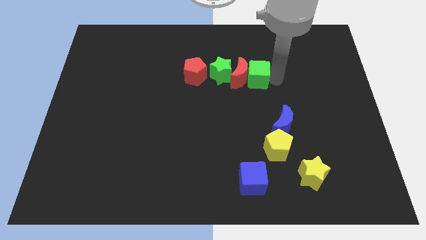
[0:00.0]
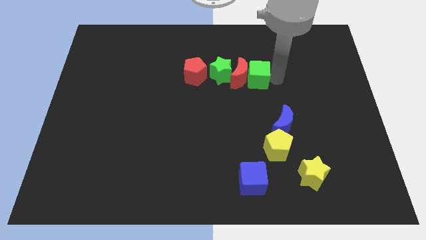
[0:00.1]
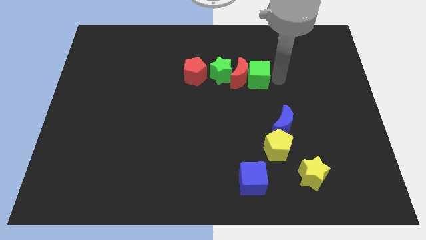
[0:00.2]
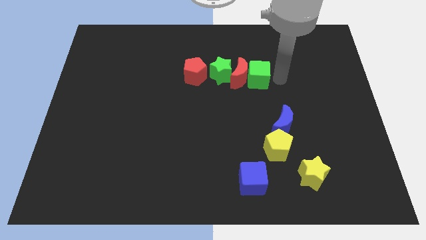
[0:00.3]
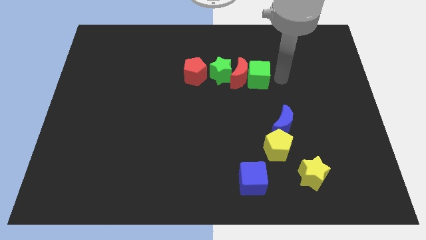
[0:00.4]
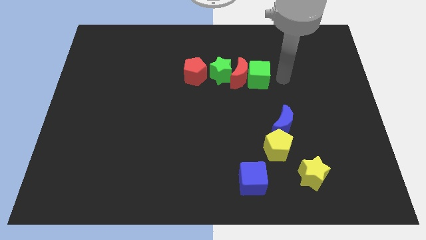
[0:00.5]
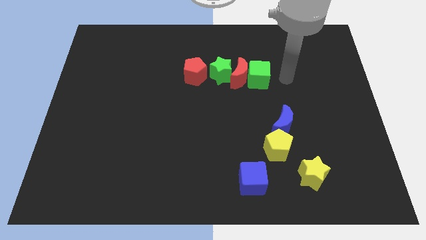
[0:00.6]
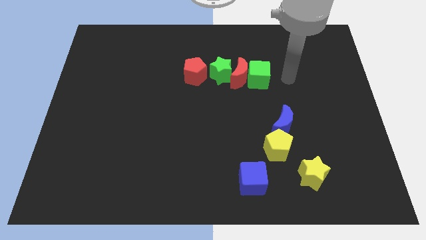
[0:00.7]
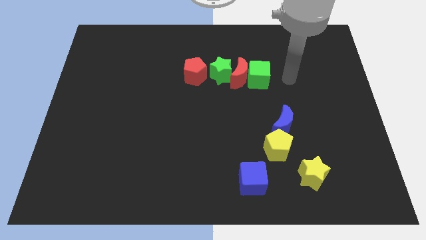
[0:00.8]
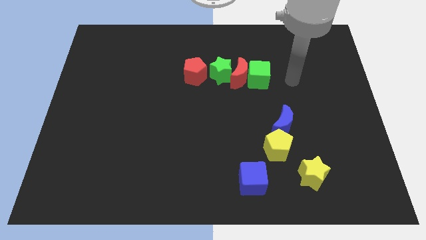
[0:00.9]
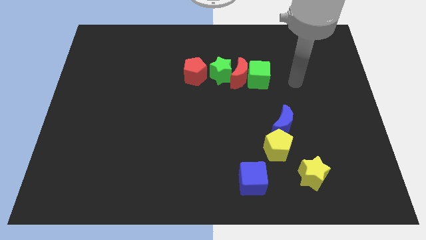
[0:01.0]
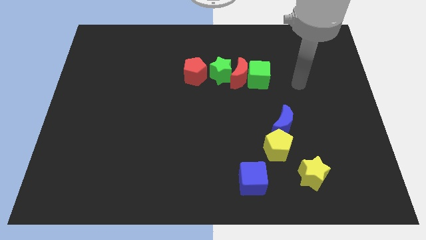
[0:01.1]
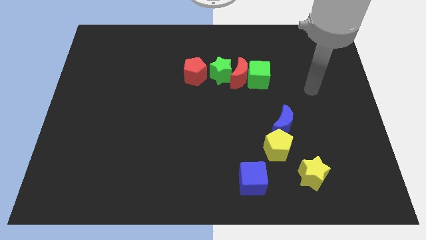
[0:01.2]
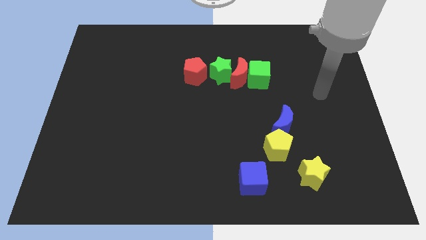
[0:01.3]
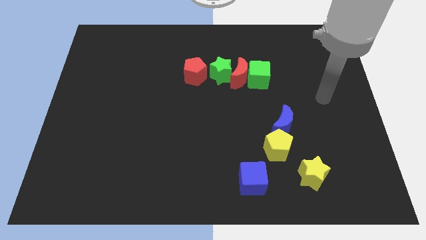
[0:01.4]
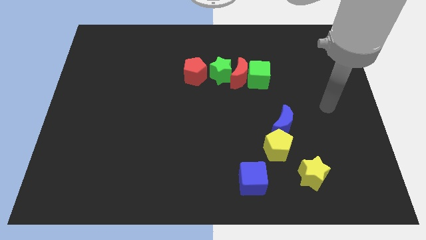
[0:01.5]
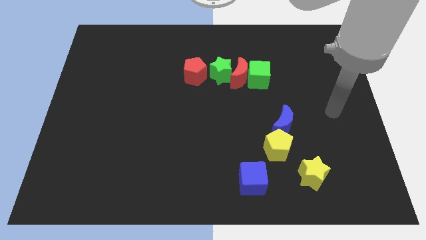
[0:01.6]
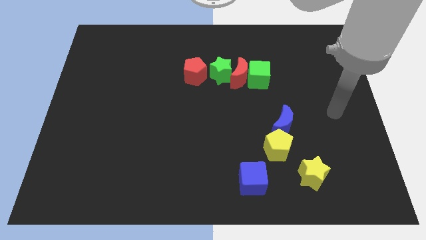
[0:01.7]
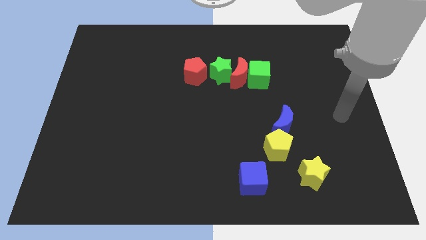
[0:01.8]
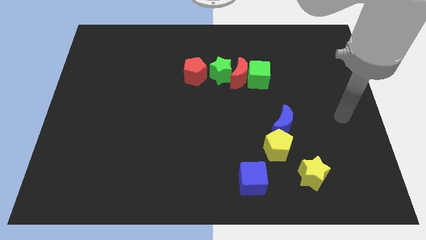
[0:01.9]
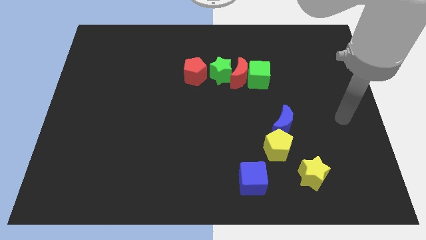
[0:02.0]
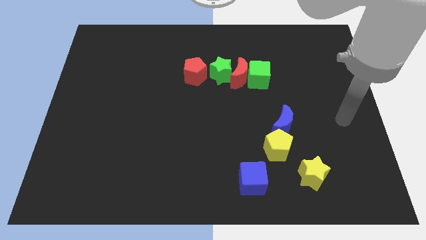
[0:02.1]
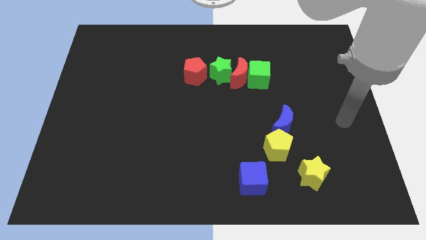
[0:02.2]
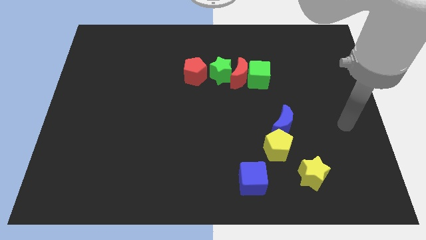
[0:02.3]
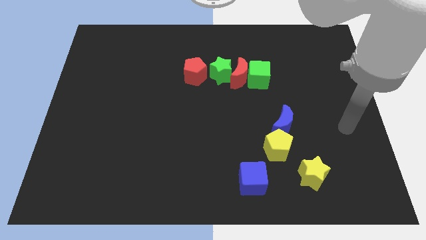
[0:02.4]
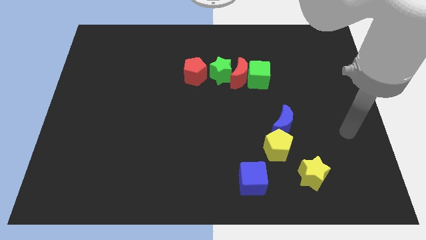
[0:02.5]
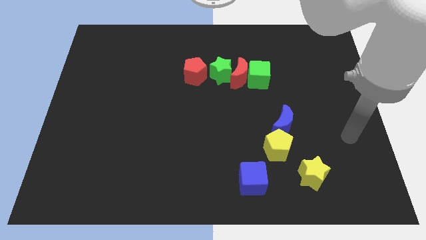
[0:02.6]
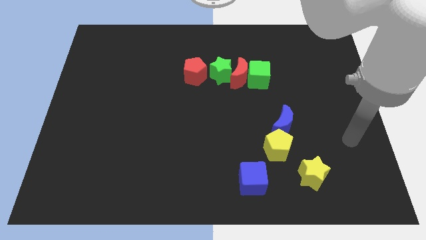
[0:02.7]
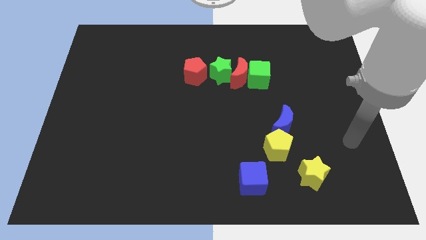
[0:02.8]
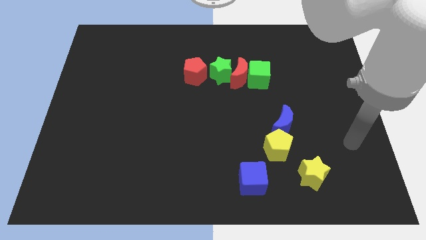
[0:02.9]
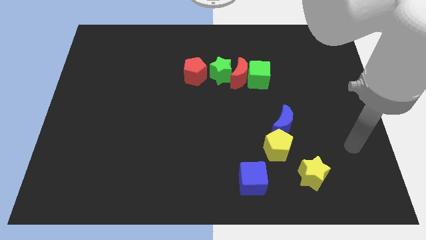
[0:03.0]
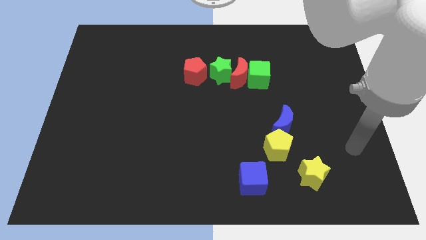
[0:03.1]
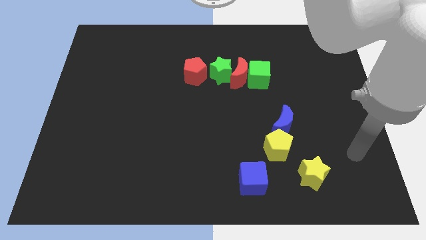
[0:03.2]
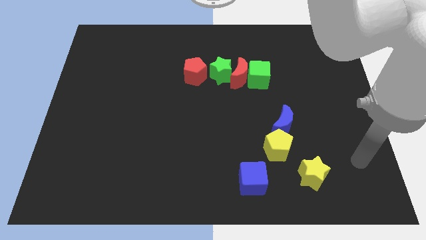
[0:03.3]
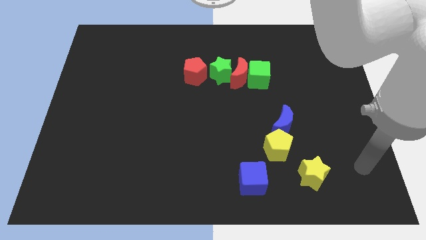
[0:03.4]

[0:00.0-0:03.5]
move arm right beside the yellow star

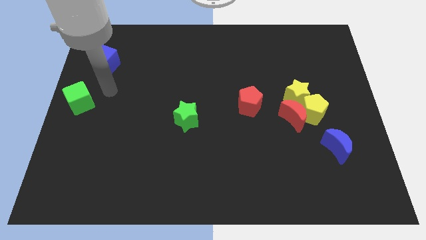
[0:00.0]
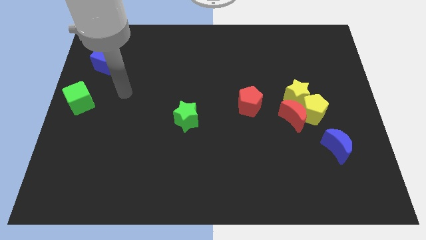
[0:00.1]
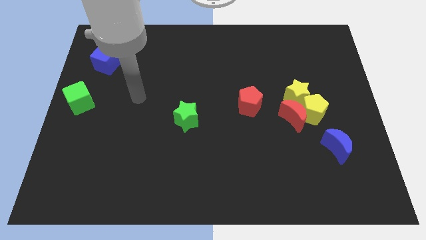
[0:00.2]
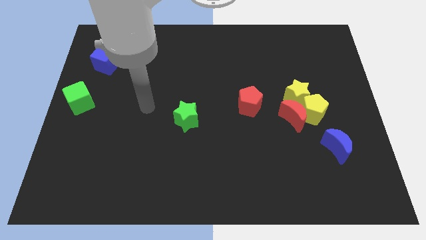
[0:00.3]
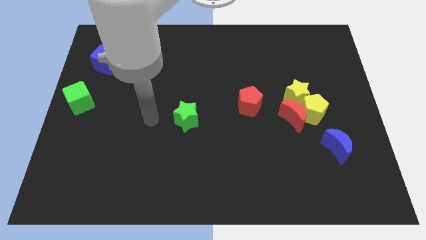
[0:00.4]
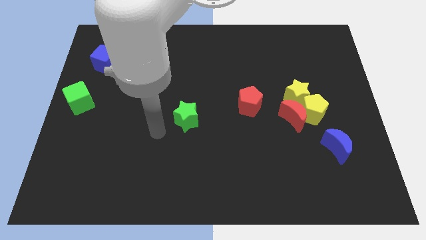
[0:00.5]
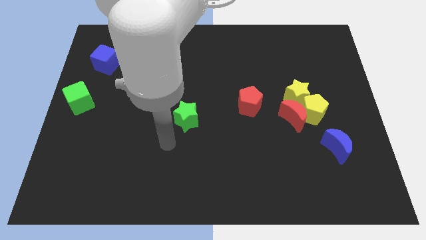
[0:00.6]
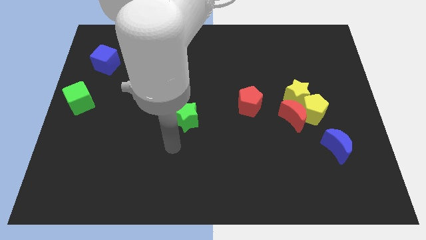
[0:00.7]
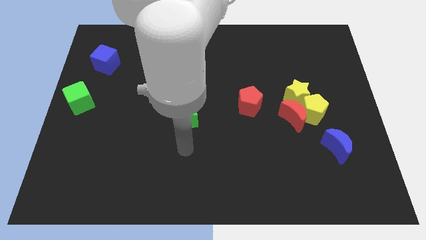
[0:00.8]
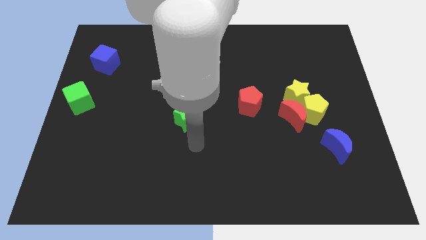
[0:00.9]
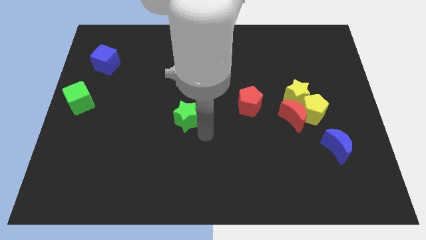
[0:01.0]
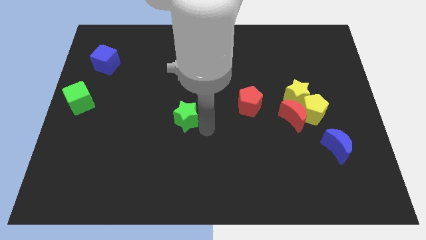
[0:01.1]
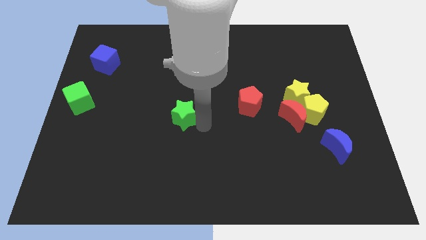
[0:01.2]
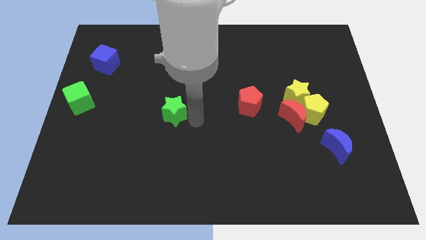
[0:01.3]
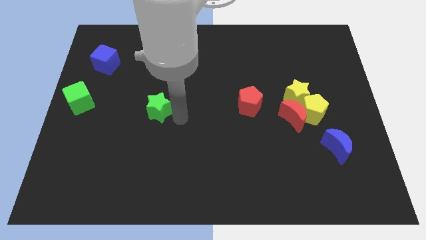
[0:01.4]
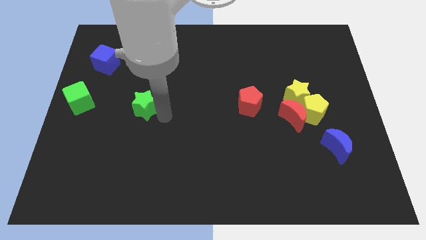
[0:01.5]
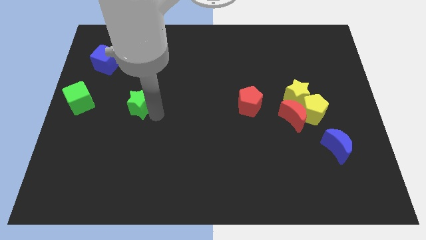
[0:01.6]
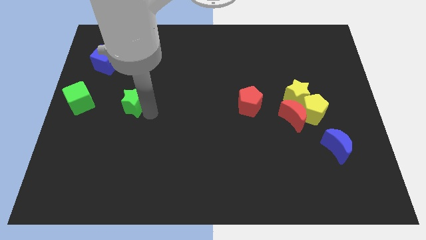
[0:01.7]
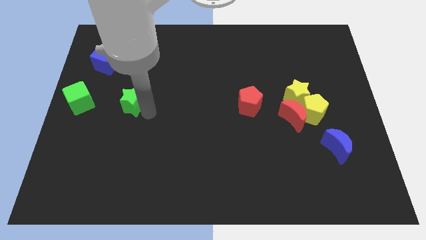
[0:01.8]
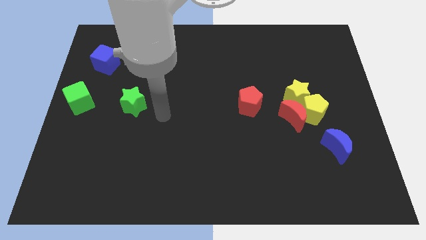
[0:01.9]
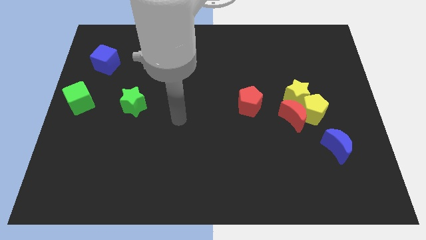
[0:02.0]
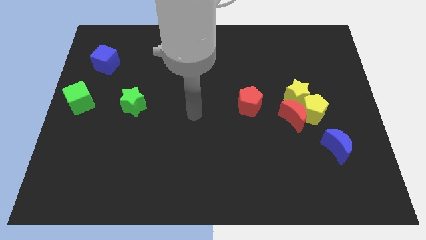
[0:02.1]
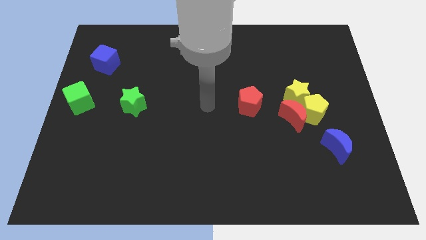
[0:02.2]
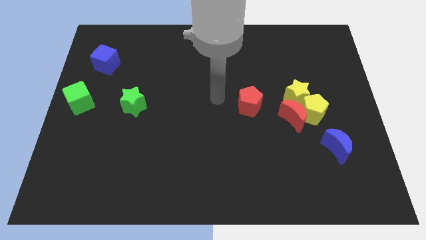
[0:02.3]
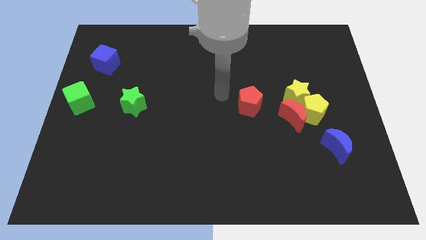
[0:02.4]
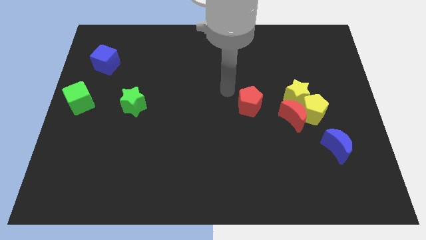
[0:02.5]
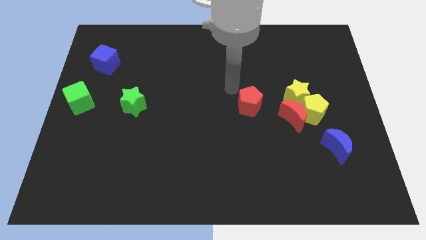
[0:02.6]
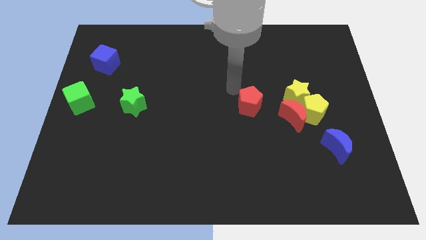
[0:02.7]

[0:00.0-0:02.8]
slide the green star to the right of the green cube

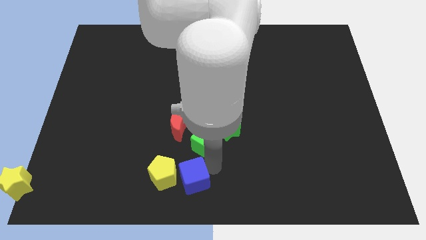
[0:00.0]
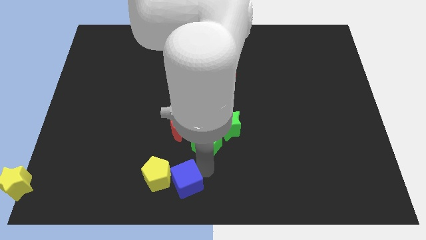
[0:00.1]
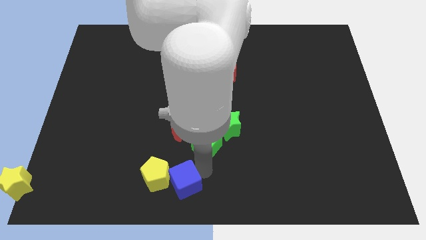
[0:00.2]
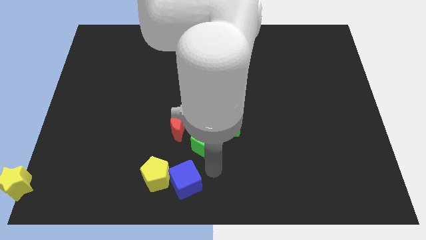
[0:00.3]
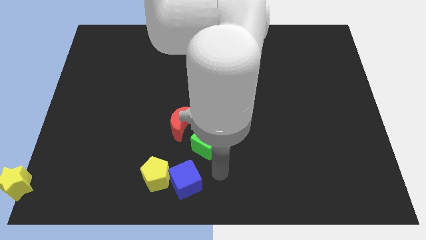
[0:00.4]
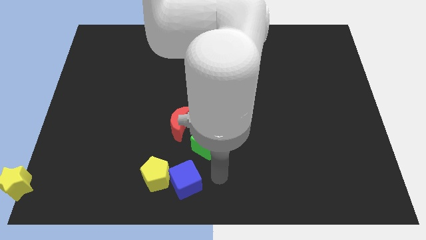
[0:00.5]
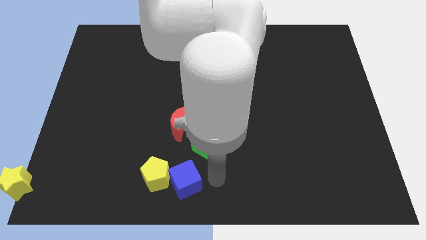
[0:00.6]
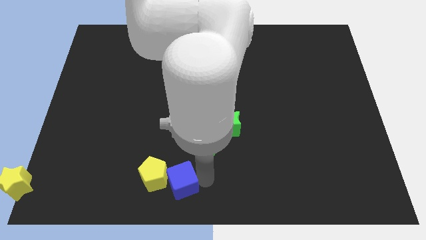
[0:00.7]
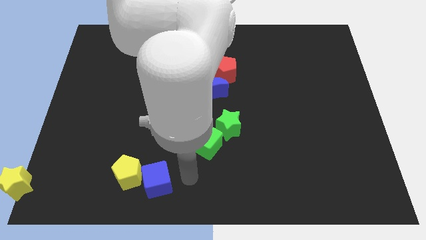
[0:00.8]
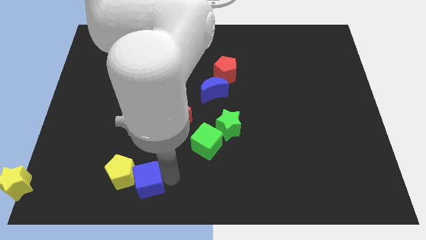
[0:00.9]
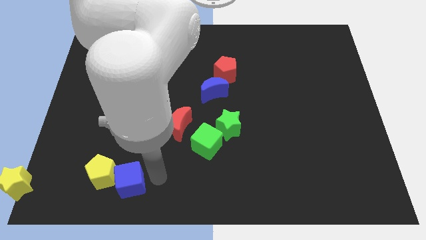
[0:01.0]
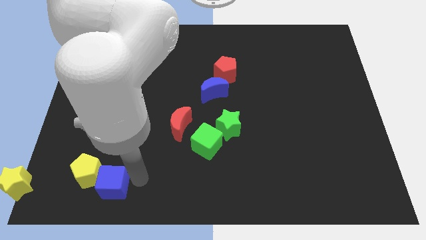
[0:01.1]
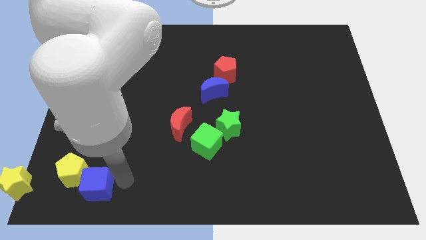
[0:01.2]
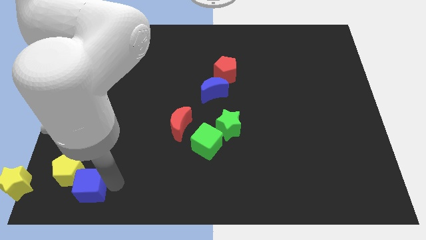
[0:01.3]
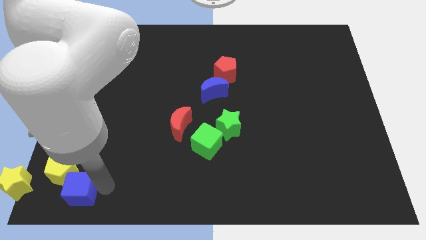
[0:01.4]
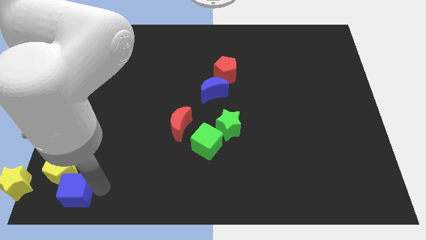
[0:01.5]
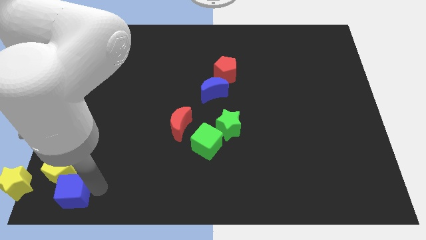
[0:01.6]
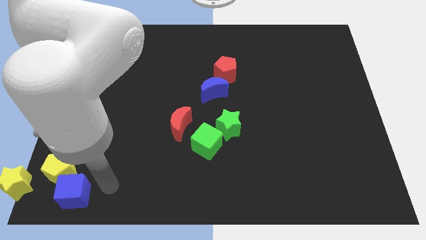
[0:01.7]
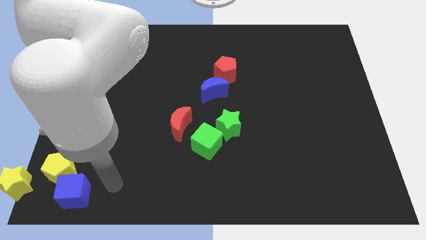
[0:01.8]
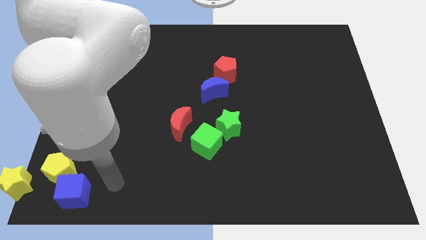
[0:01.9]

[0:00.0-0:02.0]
place blue cube towards yellow star

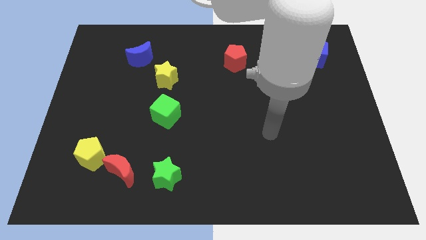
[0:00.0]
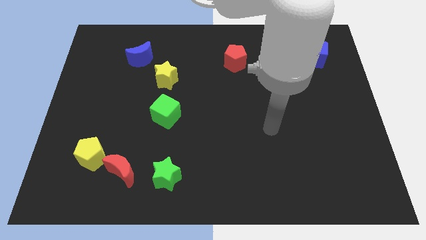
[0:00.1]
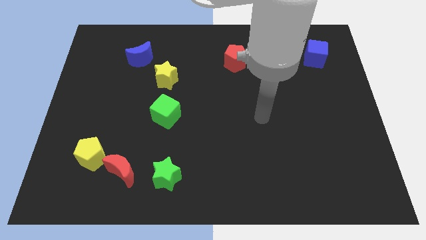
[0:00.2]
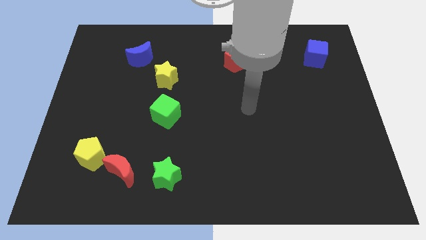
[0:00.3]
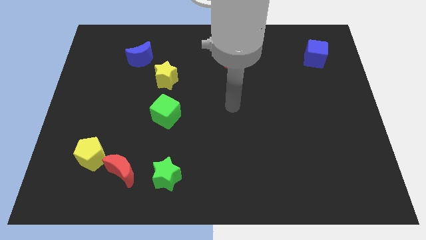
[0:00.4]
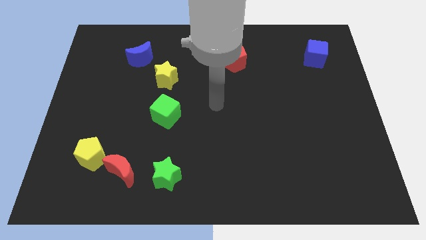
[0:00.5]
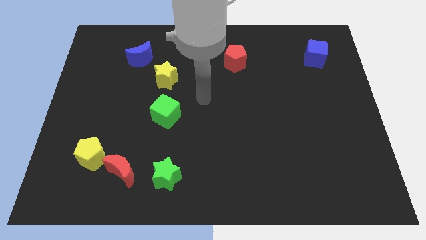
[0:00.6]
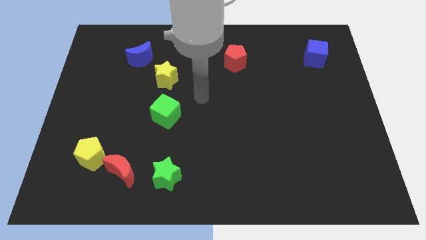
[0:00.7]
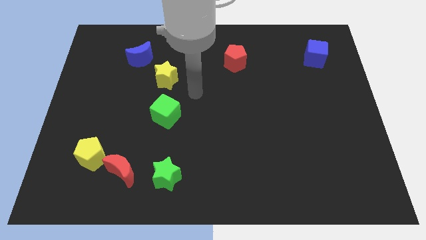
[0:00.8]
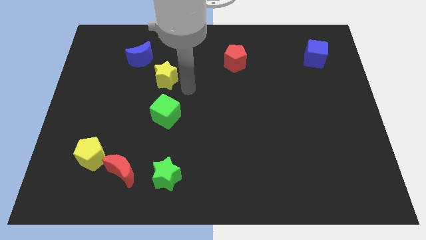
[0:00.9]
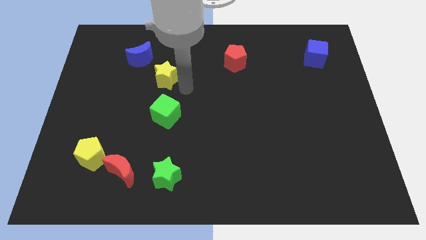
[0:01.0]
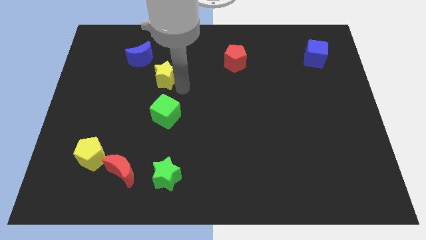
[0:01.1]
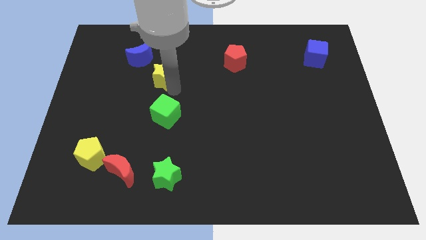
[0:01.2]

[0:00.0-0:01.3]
move the arm towards the yellow star
